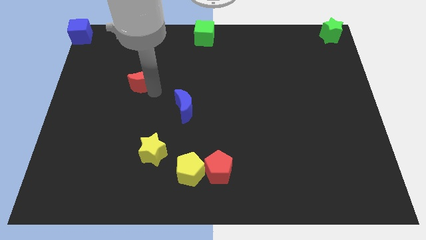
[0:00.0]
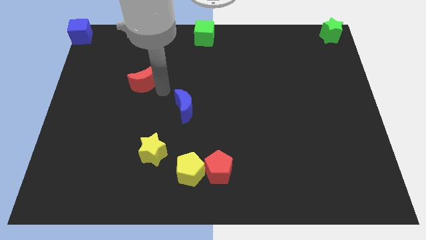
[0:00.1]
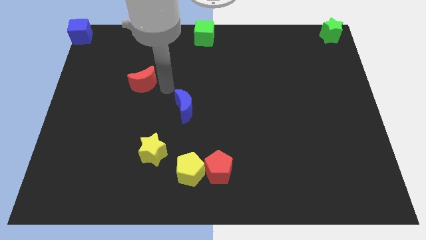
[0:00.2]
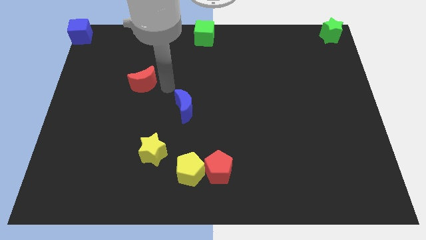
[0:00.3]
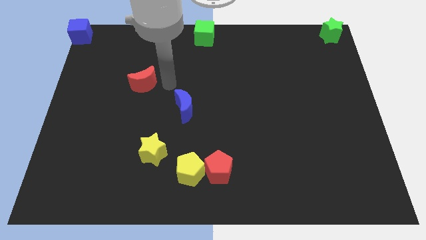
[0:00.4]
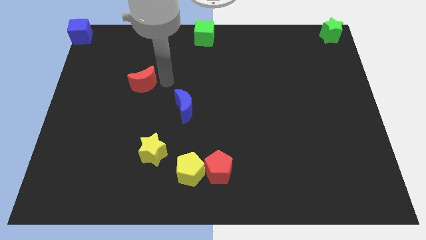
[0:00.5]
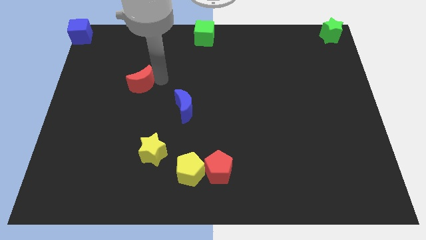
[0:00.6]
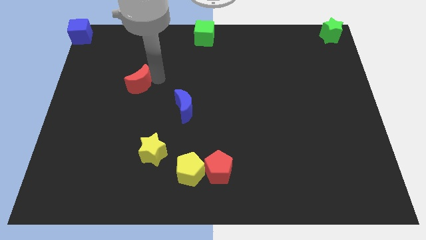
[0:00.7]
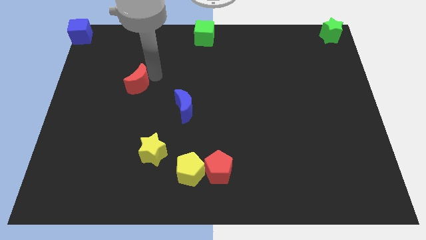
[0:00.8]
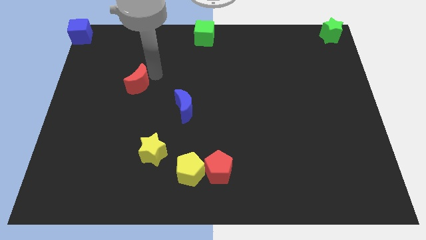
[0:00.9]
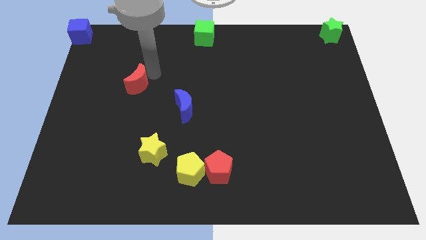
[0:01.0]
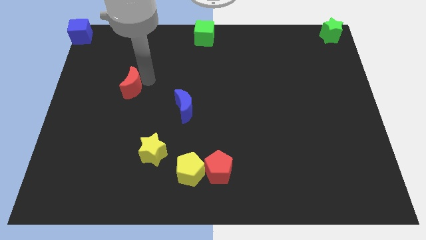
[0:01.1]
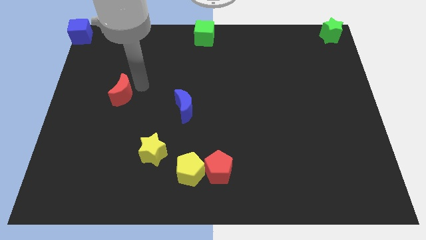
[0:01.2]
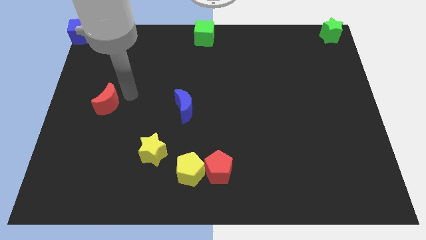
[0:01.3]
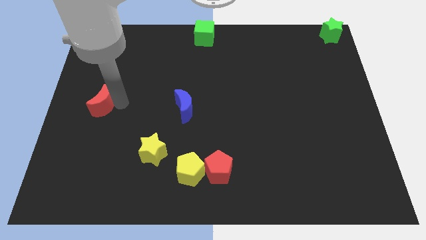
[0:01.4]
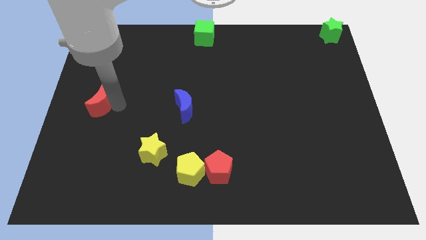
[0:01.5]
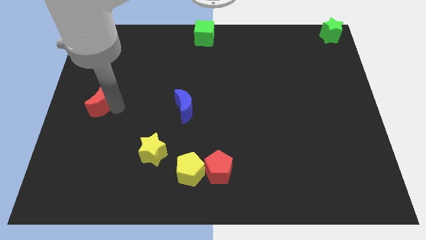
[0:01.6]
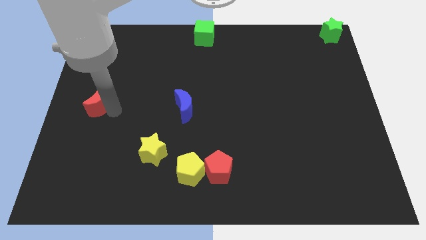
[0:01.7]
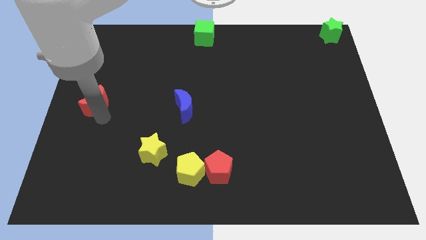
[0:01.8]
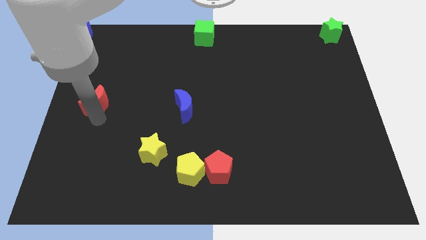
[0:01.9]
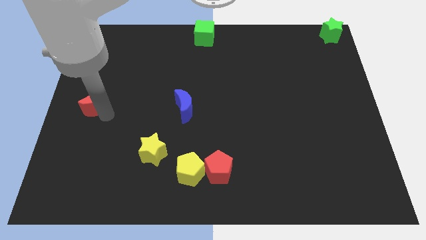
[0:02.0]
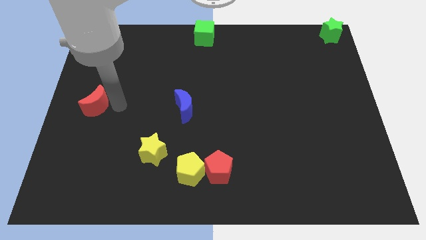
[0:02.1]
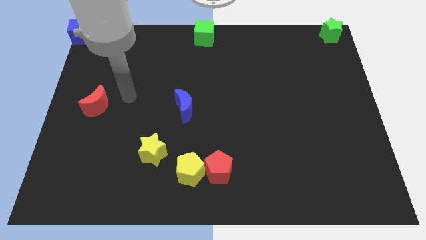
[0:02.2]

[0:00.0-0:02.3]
push the red moon parallel to blue moon

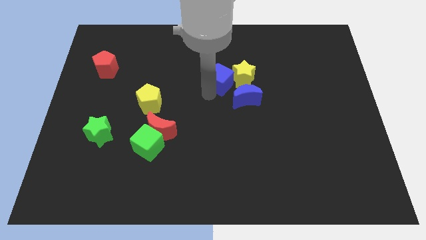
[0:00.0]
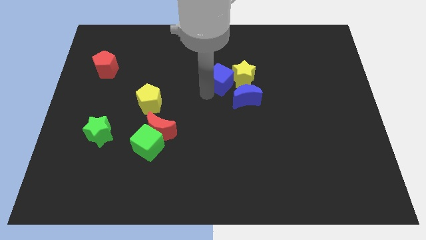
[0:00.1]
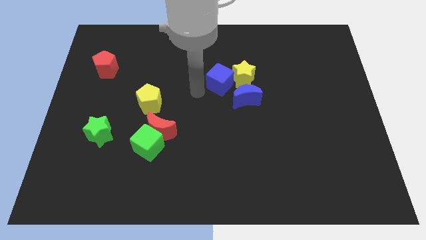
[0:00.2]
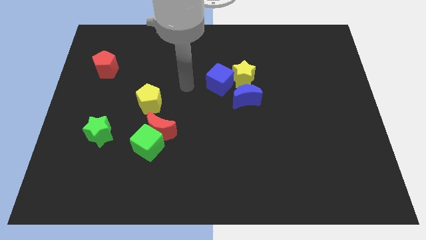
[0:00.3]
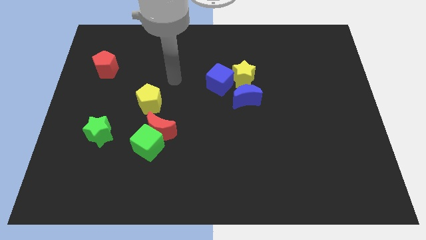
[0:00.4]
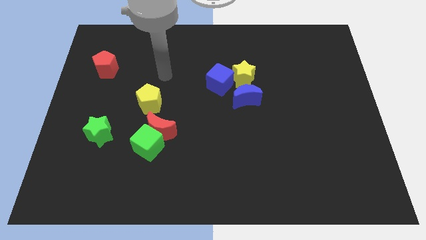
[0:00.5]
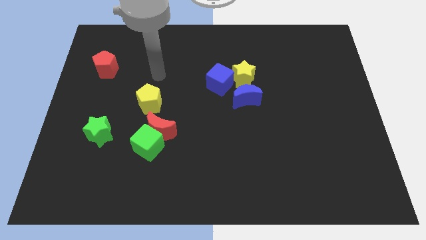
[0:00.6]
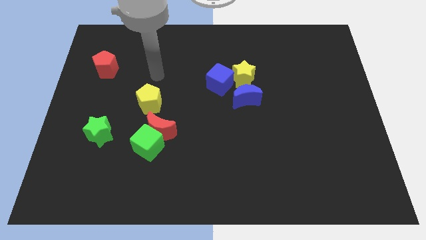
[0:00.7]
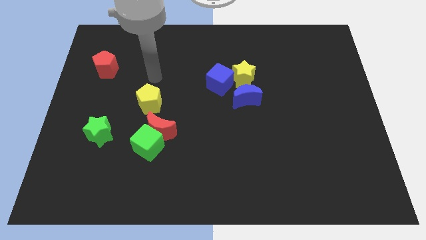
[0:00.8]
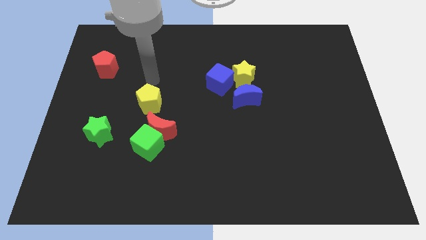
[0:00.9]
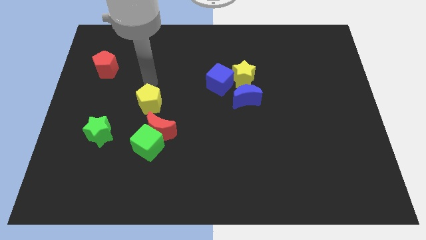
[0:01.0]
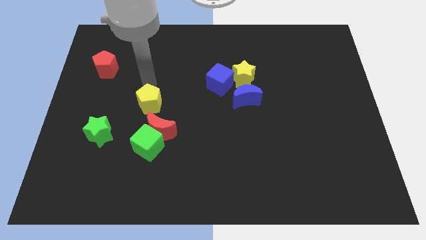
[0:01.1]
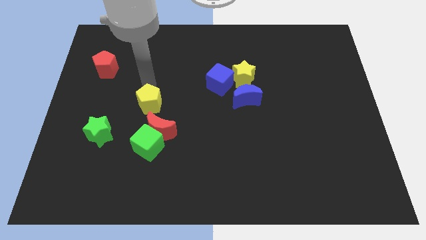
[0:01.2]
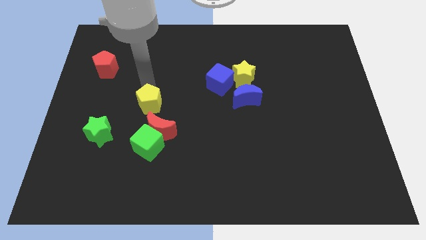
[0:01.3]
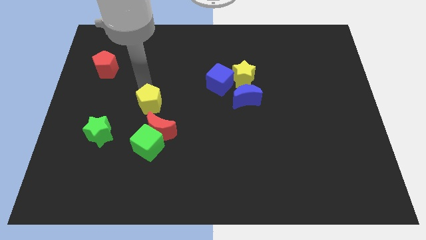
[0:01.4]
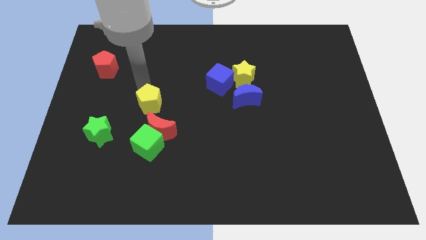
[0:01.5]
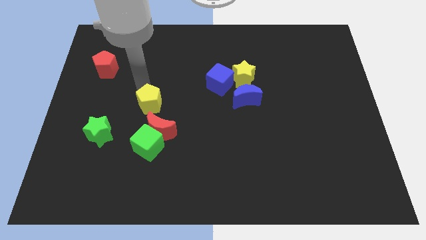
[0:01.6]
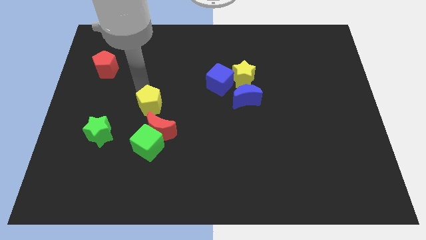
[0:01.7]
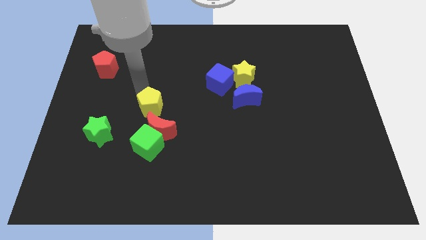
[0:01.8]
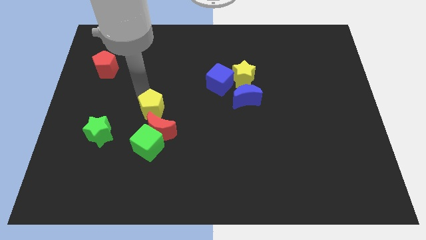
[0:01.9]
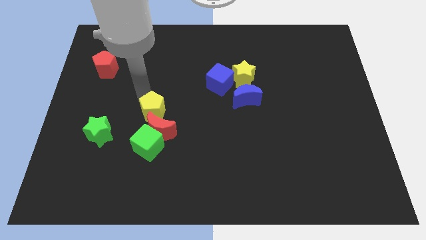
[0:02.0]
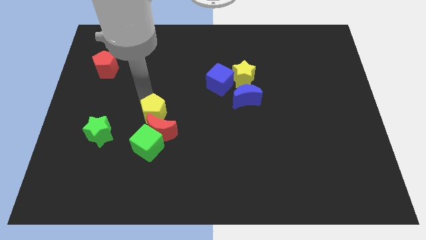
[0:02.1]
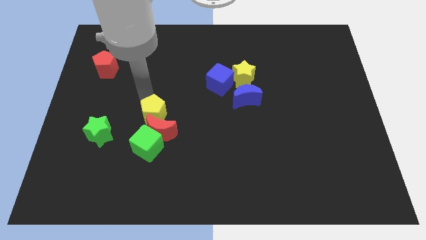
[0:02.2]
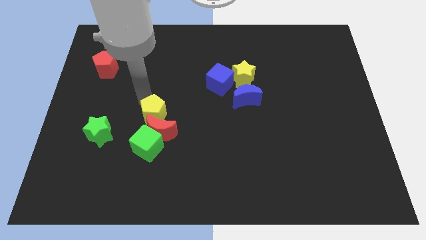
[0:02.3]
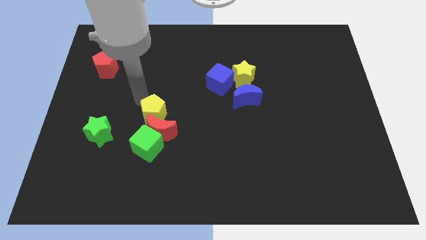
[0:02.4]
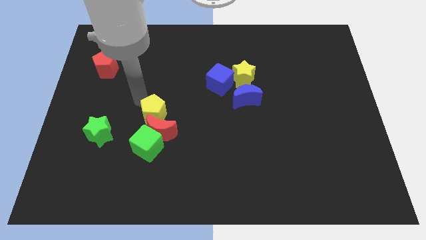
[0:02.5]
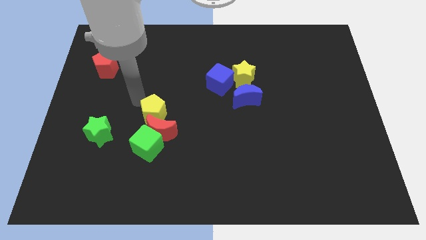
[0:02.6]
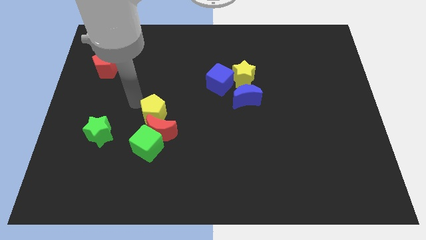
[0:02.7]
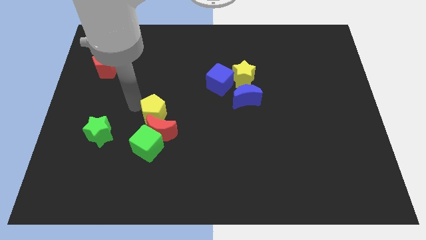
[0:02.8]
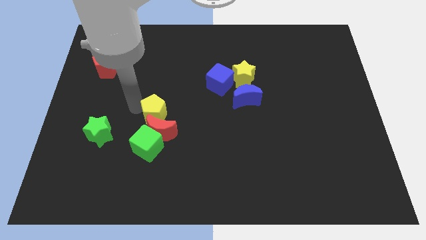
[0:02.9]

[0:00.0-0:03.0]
push the yellow pentagon towards the red moon

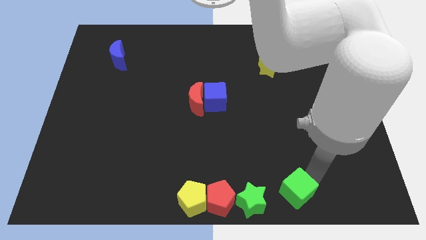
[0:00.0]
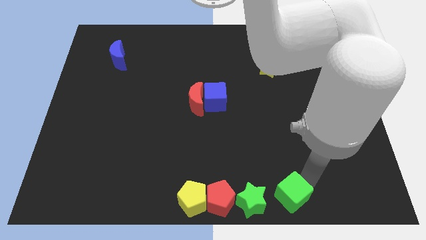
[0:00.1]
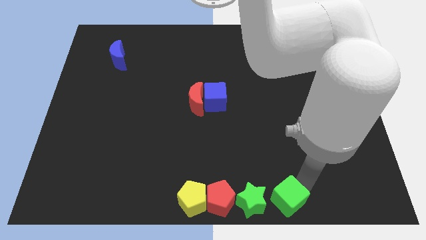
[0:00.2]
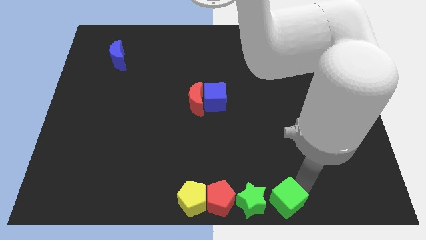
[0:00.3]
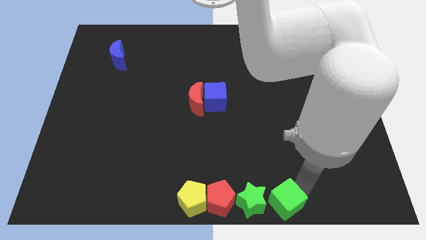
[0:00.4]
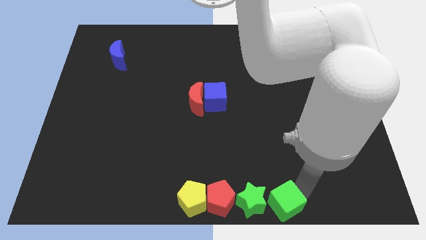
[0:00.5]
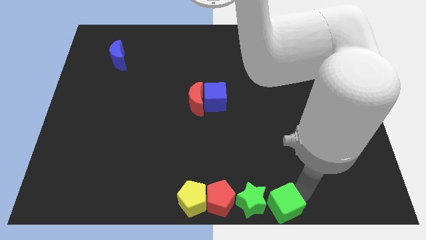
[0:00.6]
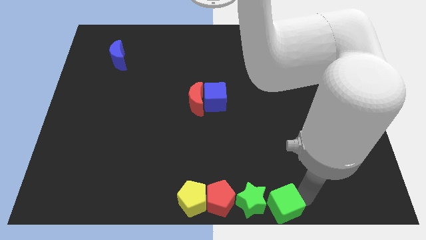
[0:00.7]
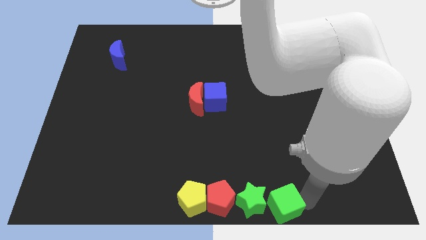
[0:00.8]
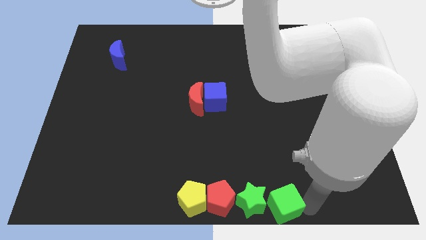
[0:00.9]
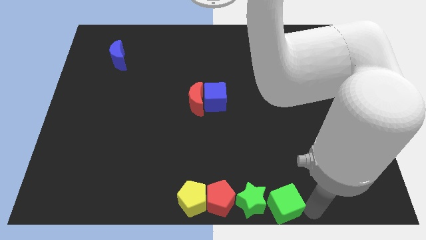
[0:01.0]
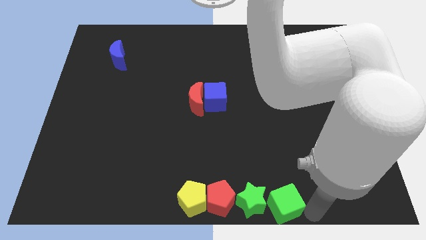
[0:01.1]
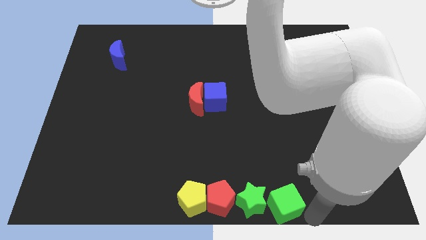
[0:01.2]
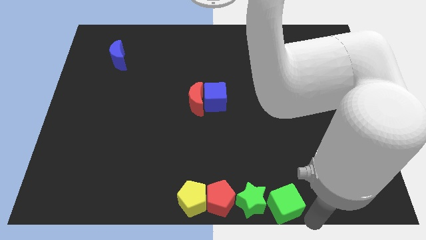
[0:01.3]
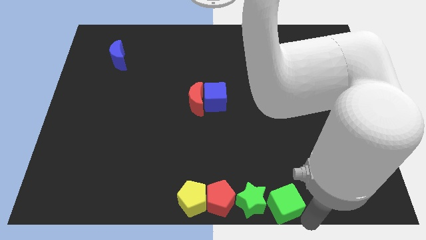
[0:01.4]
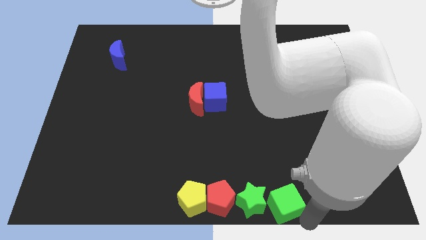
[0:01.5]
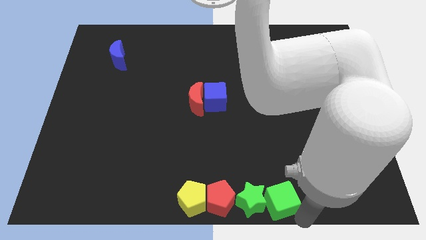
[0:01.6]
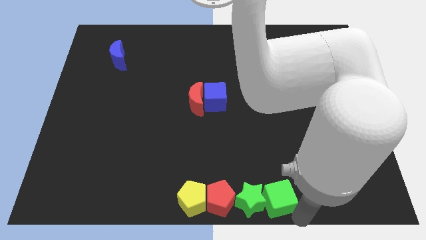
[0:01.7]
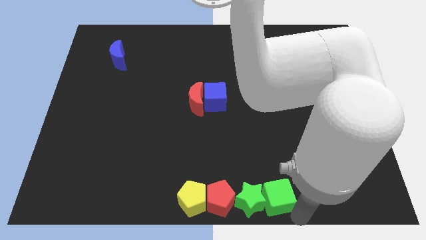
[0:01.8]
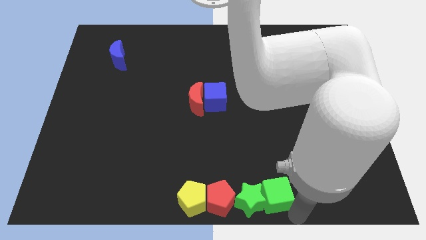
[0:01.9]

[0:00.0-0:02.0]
place the green cube close to the green star

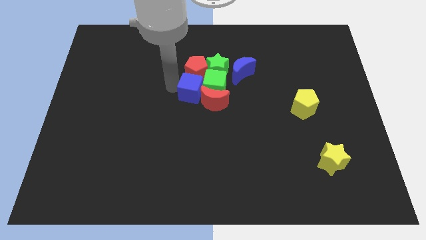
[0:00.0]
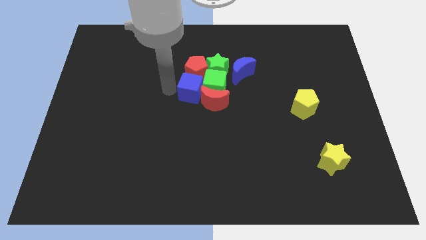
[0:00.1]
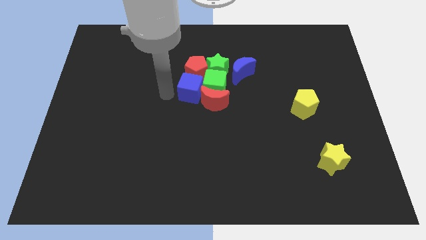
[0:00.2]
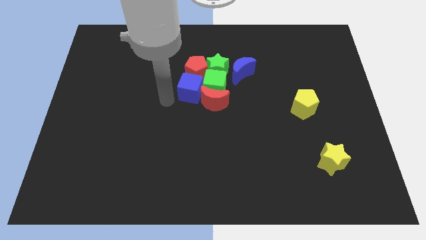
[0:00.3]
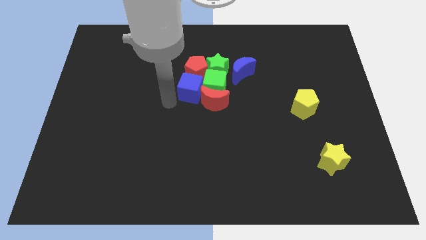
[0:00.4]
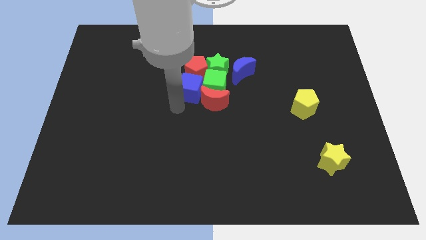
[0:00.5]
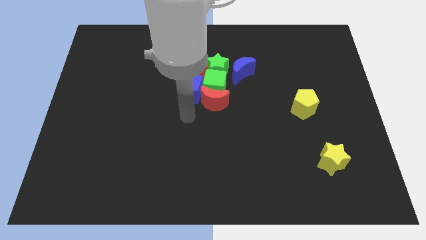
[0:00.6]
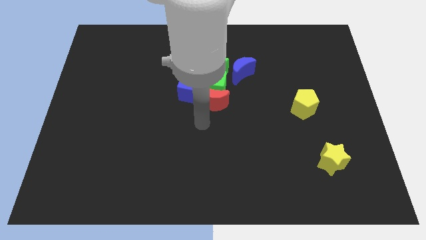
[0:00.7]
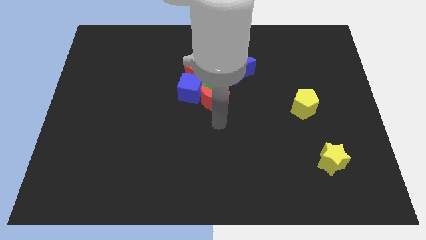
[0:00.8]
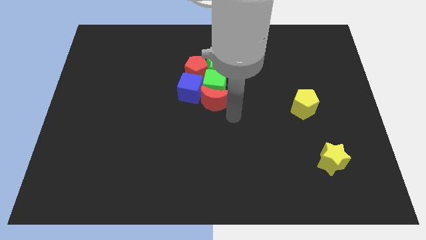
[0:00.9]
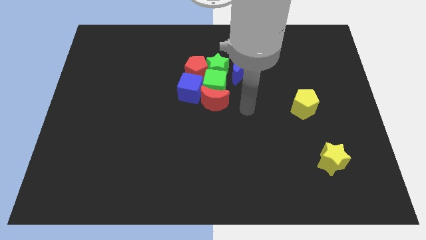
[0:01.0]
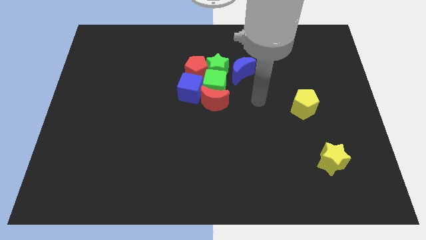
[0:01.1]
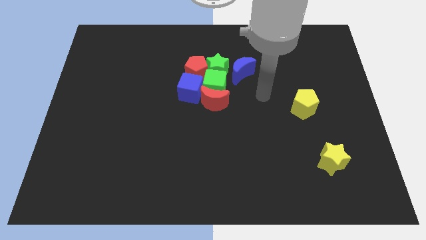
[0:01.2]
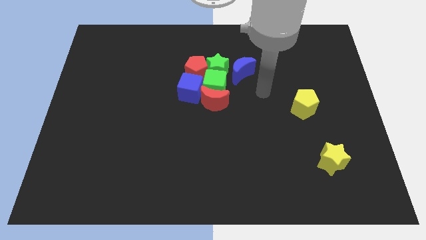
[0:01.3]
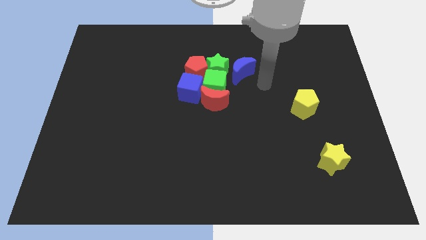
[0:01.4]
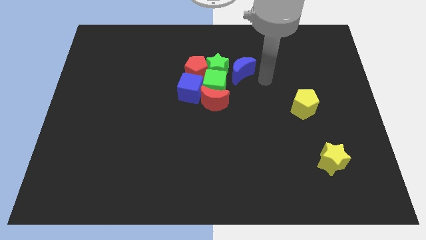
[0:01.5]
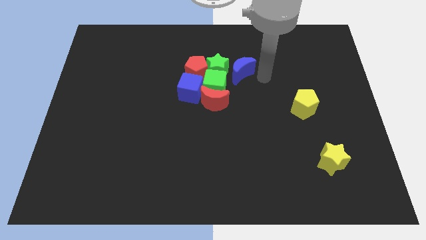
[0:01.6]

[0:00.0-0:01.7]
move your arm to the right side of the blue moon
